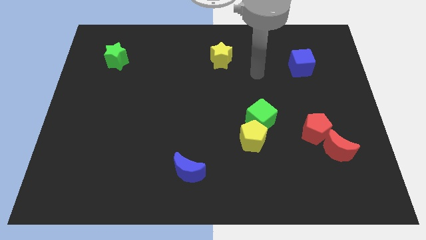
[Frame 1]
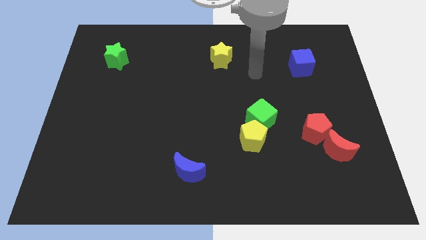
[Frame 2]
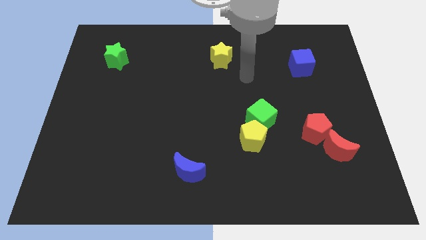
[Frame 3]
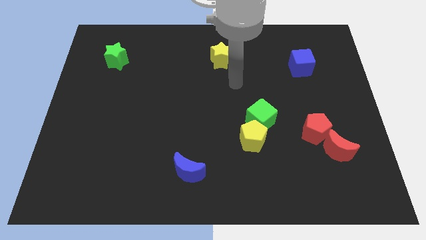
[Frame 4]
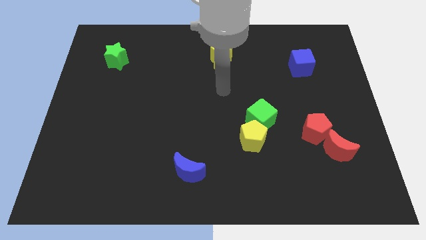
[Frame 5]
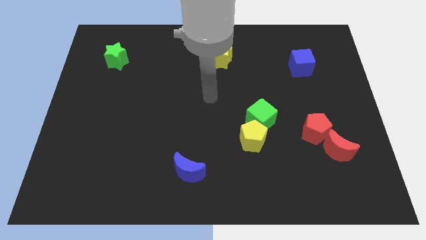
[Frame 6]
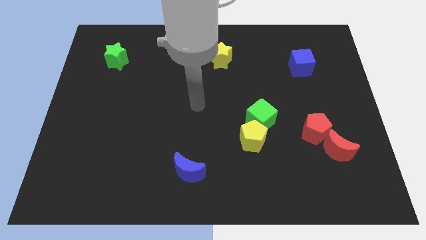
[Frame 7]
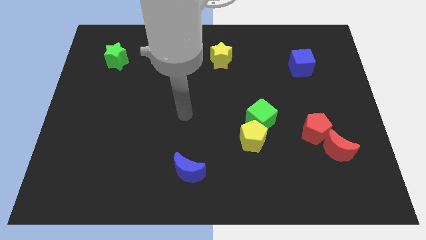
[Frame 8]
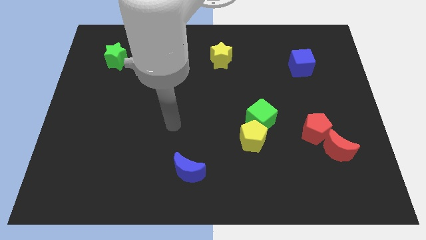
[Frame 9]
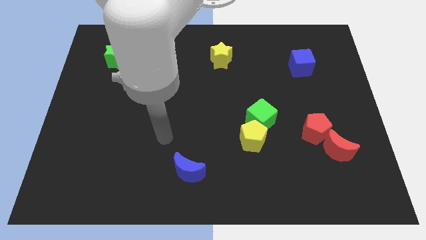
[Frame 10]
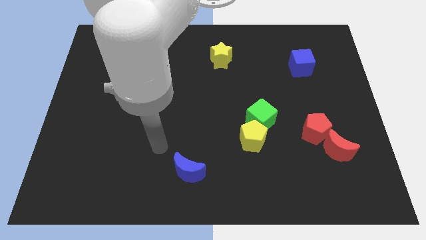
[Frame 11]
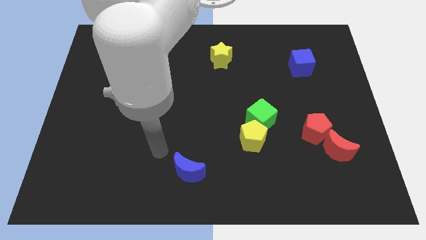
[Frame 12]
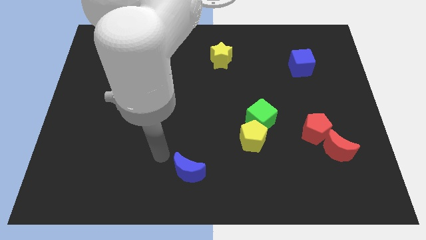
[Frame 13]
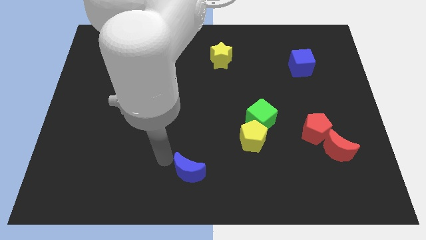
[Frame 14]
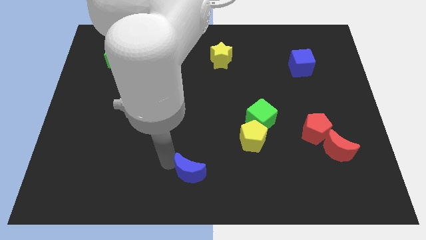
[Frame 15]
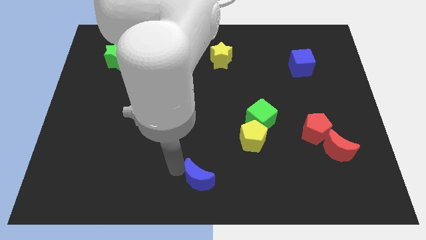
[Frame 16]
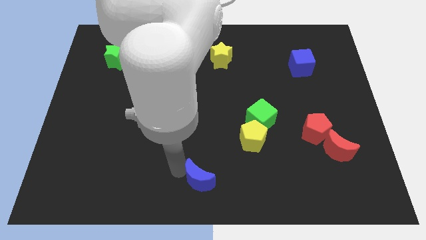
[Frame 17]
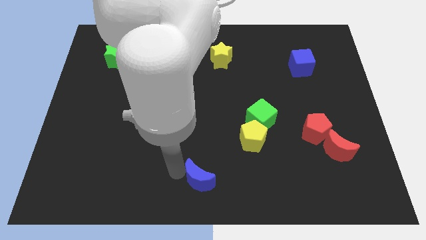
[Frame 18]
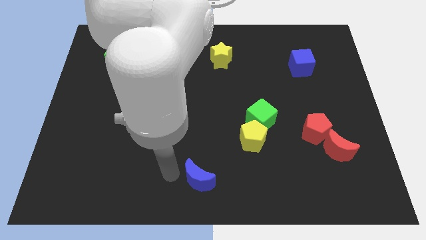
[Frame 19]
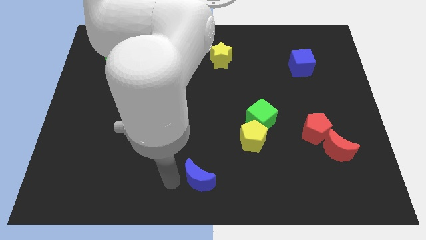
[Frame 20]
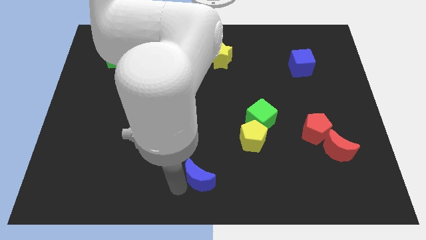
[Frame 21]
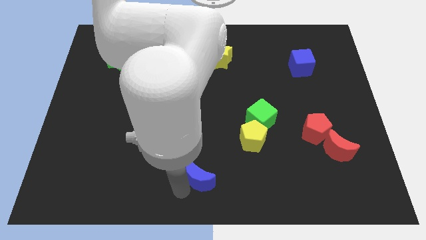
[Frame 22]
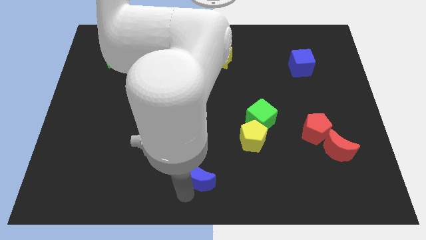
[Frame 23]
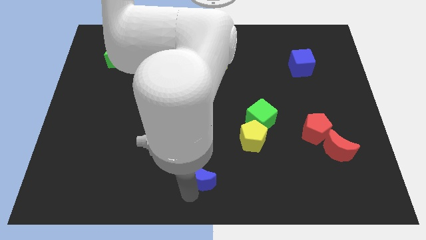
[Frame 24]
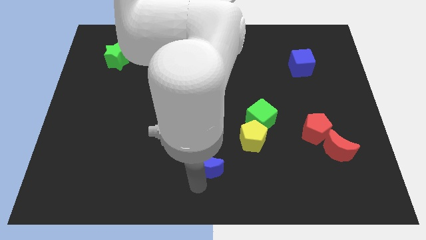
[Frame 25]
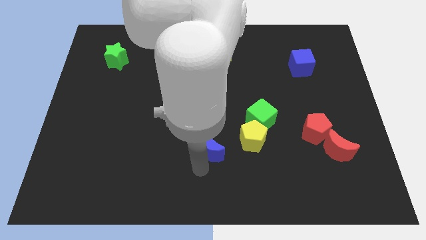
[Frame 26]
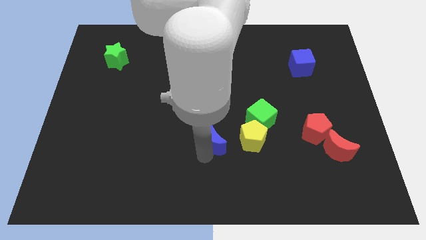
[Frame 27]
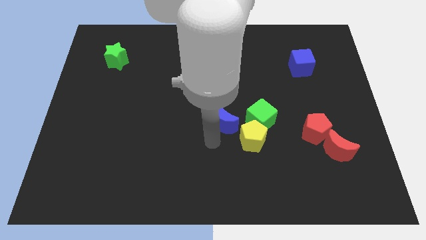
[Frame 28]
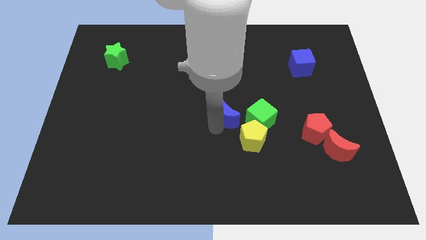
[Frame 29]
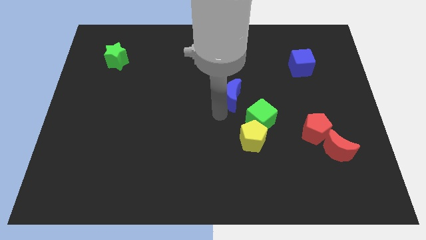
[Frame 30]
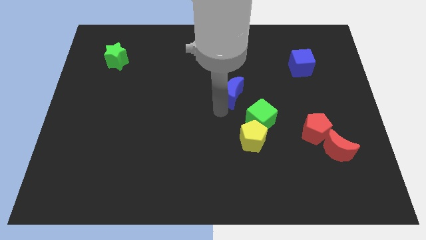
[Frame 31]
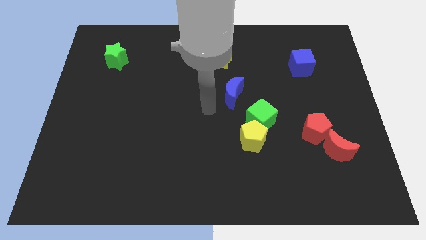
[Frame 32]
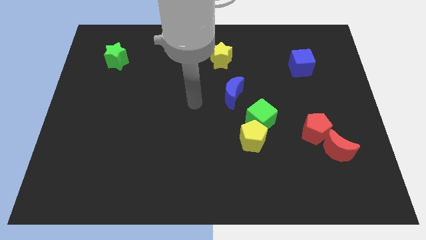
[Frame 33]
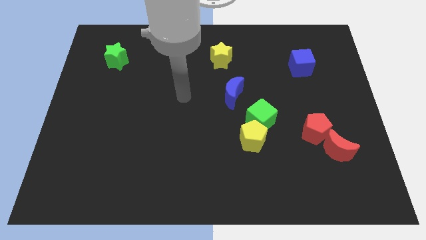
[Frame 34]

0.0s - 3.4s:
move the blue moon towards the center of the board

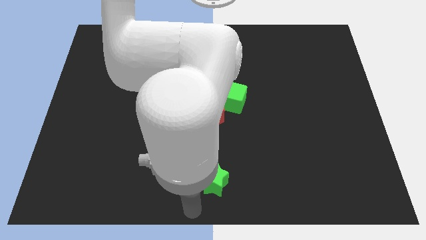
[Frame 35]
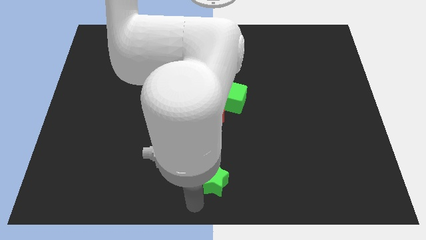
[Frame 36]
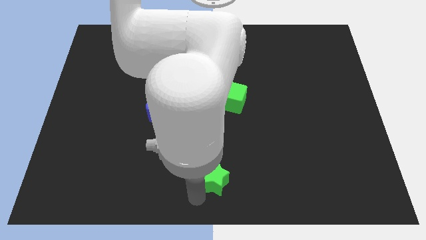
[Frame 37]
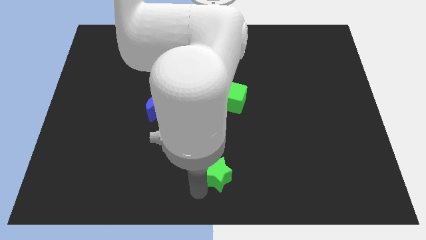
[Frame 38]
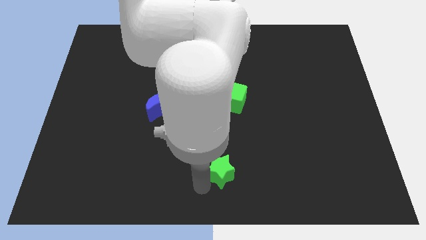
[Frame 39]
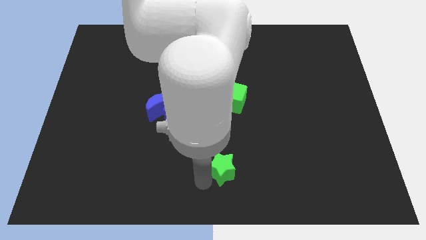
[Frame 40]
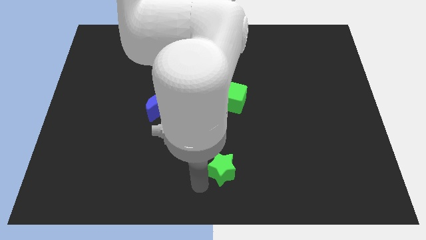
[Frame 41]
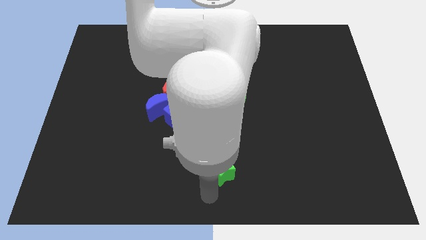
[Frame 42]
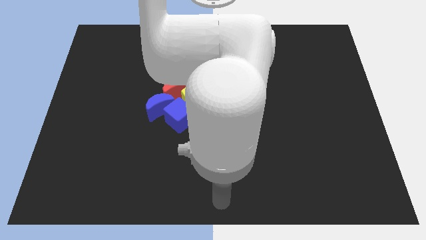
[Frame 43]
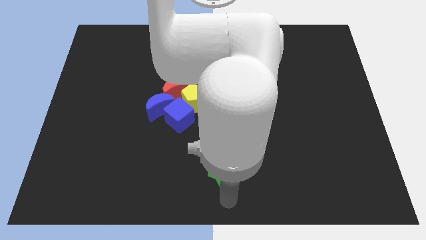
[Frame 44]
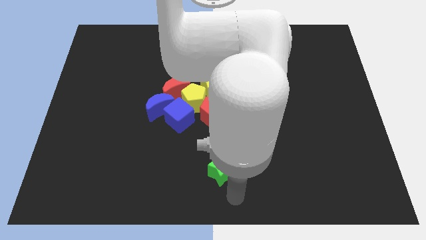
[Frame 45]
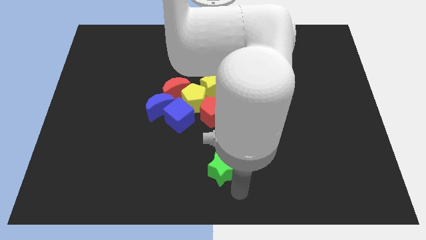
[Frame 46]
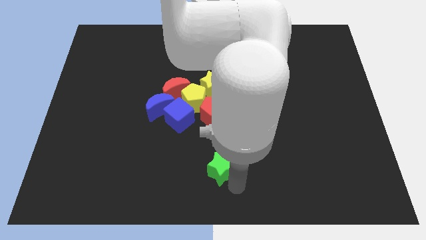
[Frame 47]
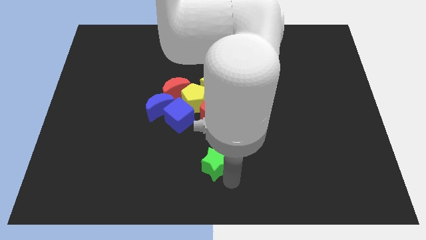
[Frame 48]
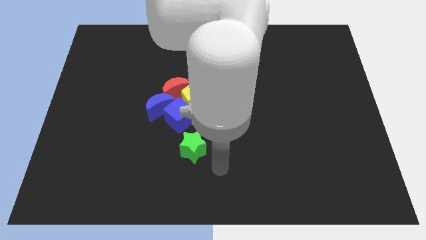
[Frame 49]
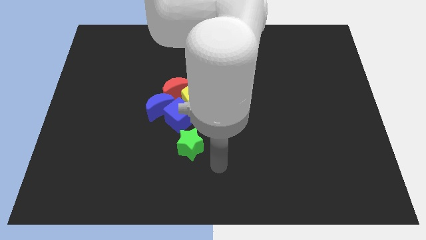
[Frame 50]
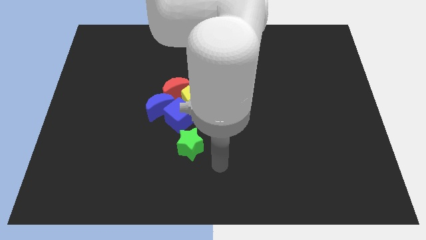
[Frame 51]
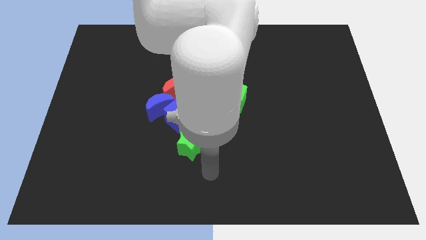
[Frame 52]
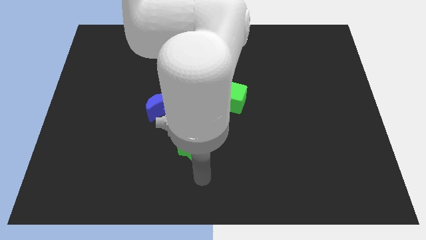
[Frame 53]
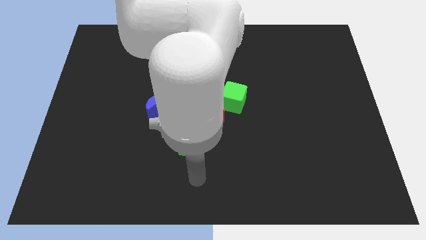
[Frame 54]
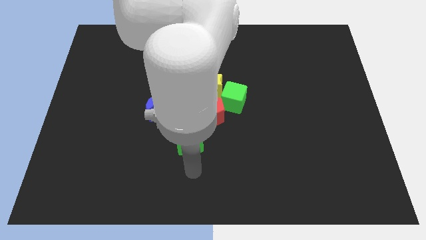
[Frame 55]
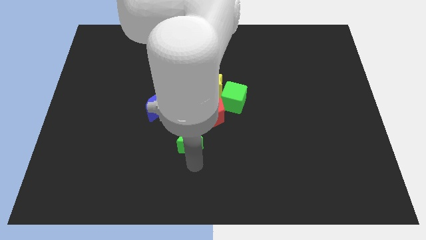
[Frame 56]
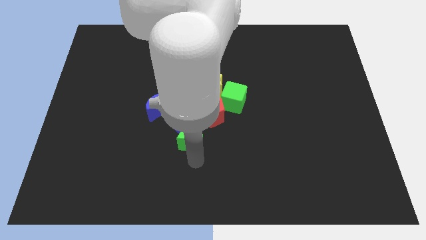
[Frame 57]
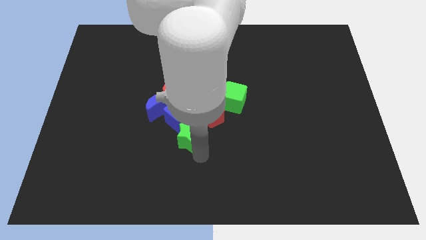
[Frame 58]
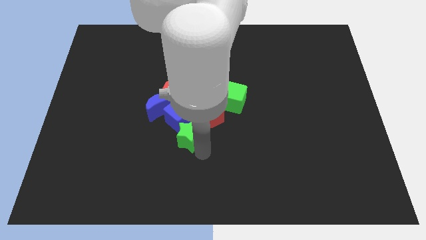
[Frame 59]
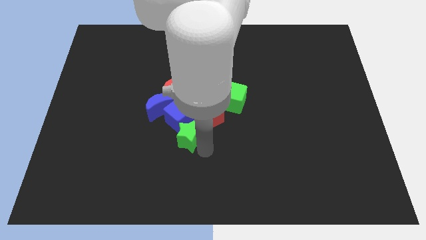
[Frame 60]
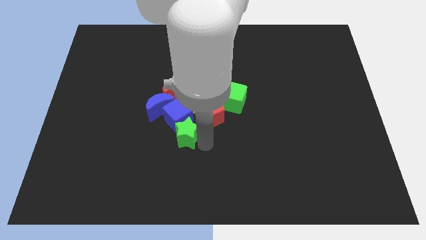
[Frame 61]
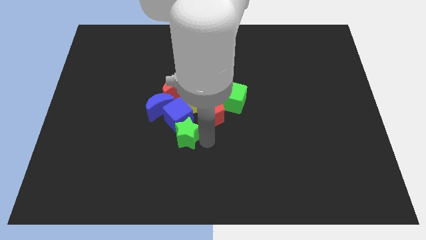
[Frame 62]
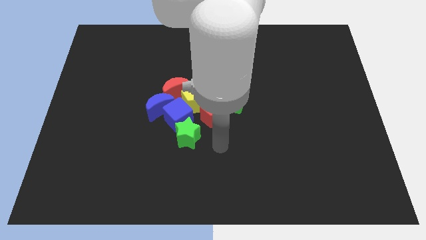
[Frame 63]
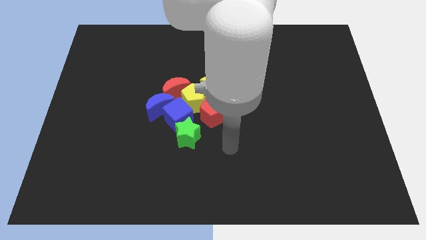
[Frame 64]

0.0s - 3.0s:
attach the green star to the bottom side of the blue cube

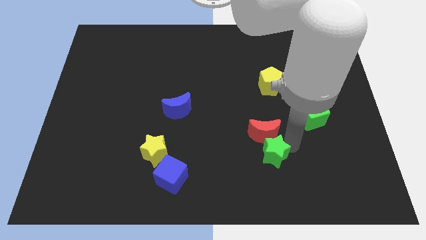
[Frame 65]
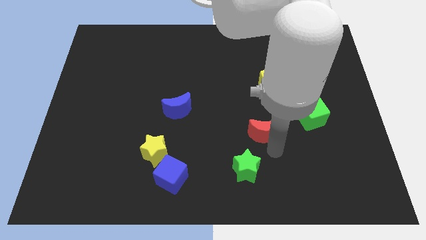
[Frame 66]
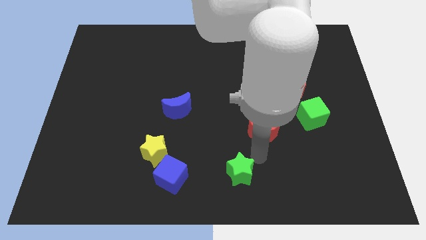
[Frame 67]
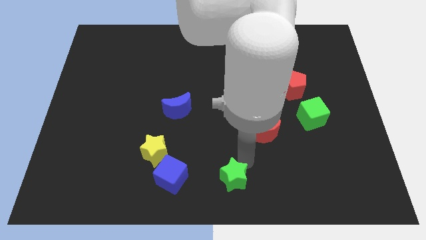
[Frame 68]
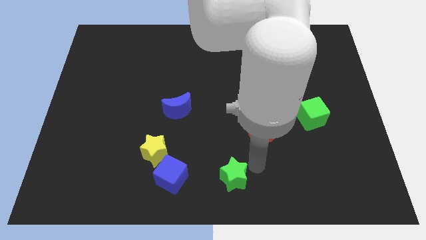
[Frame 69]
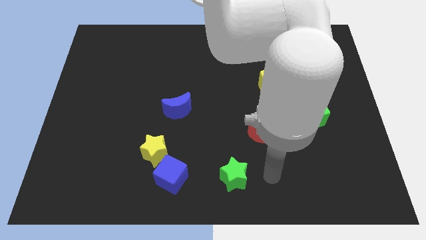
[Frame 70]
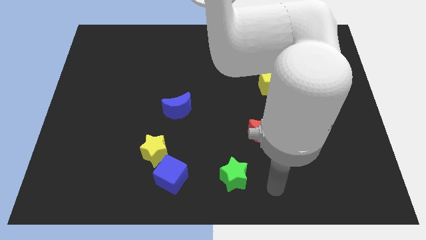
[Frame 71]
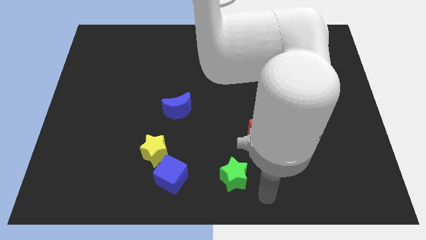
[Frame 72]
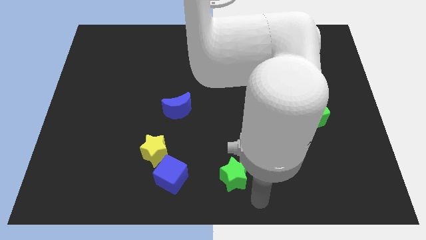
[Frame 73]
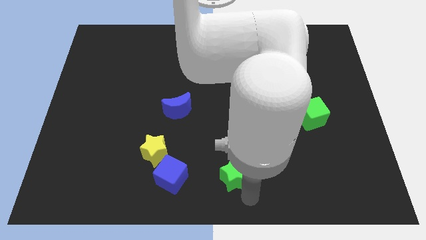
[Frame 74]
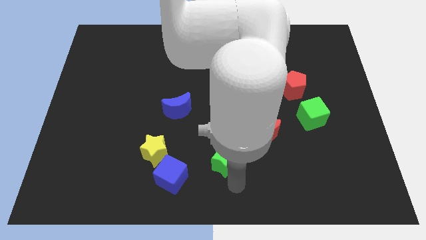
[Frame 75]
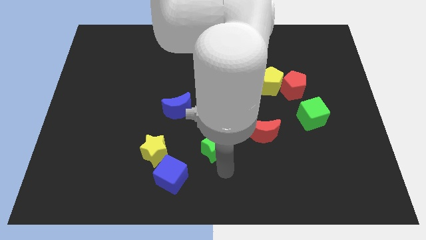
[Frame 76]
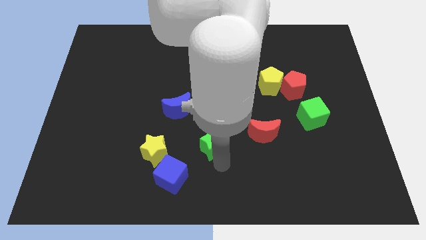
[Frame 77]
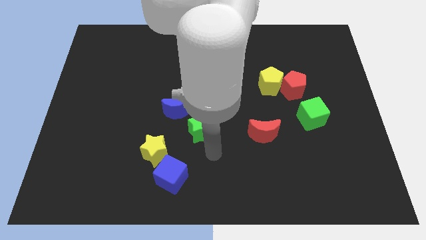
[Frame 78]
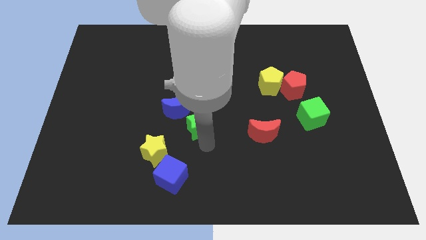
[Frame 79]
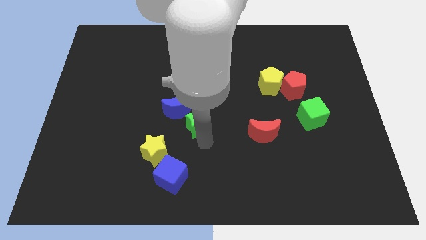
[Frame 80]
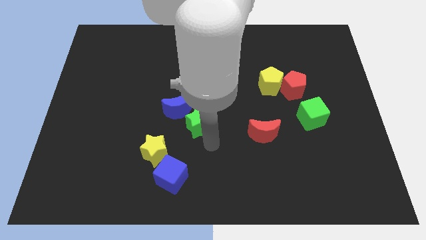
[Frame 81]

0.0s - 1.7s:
move the green star near to the bottom side of the blue crescent

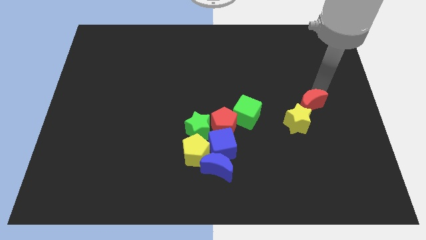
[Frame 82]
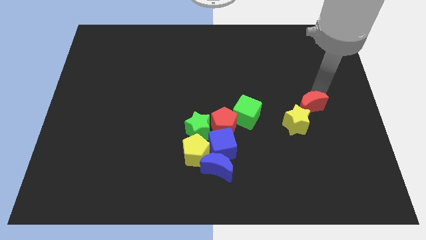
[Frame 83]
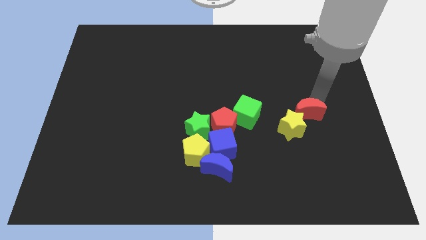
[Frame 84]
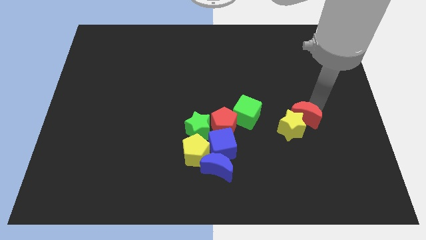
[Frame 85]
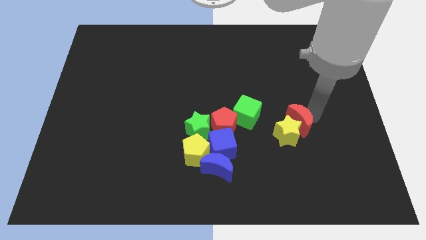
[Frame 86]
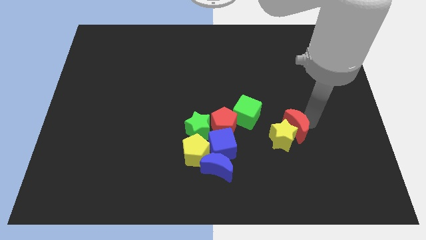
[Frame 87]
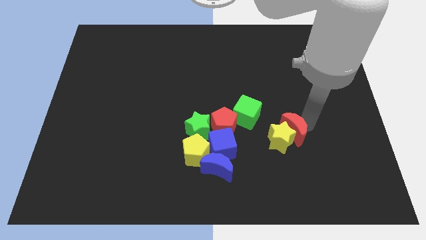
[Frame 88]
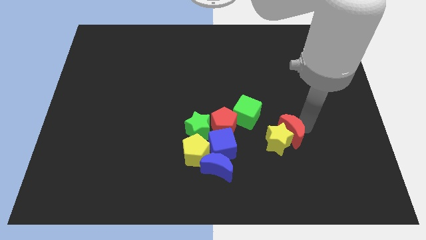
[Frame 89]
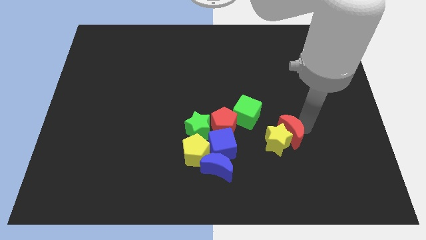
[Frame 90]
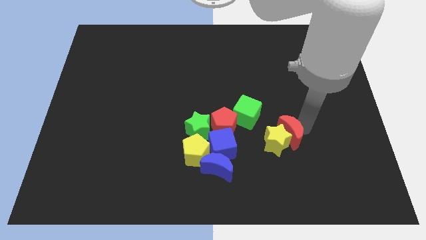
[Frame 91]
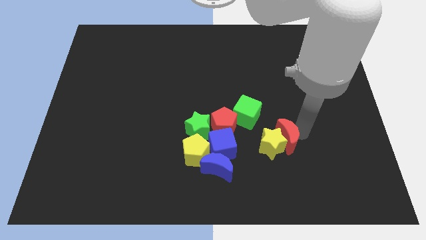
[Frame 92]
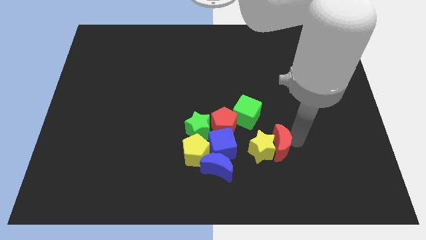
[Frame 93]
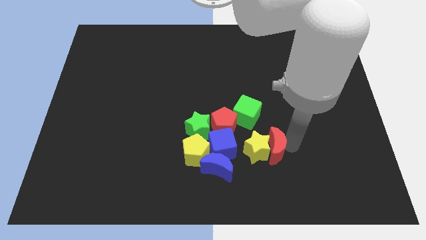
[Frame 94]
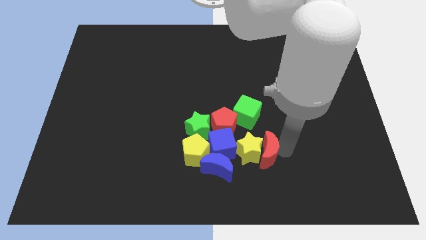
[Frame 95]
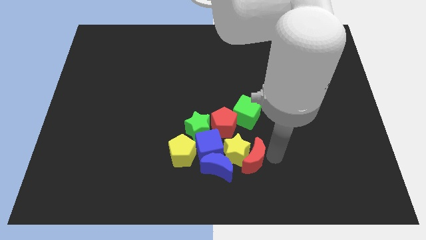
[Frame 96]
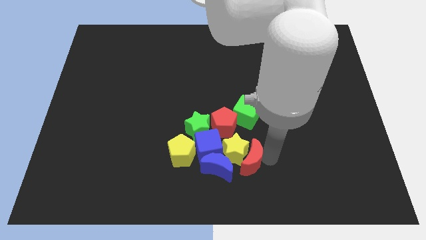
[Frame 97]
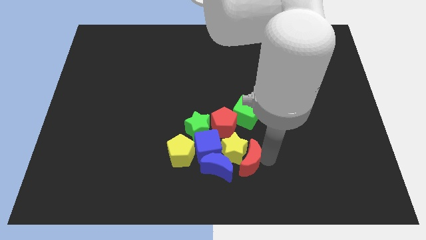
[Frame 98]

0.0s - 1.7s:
push the yellow star and red moon into the blue cube
